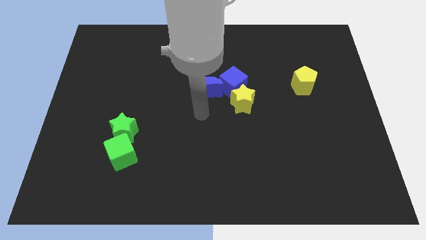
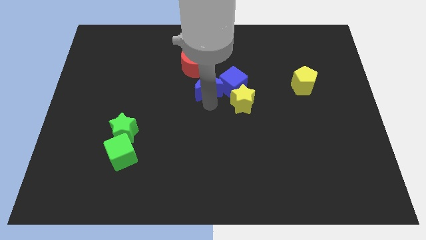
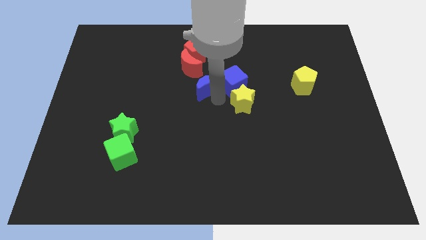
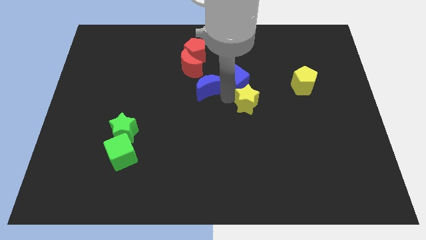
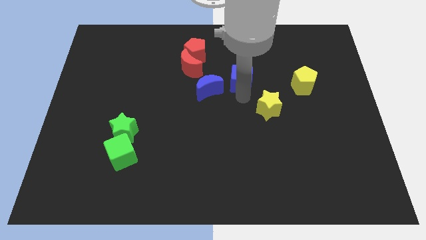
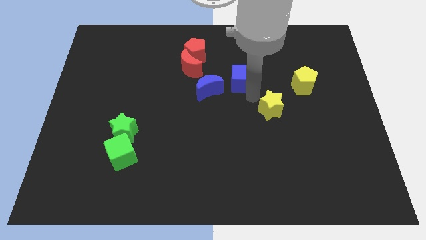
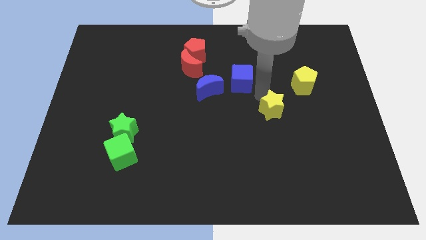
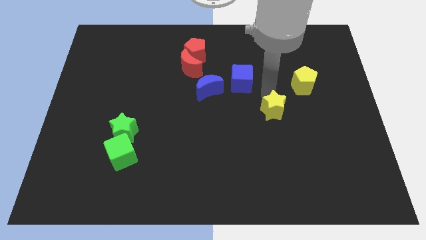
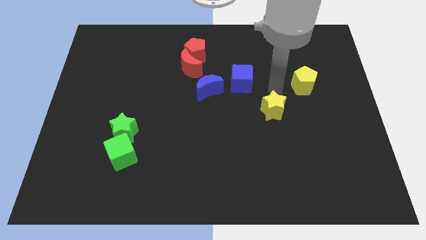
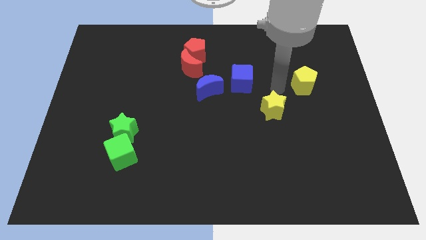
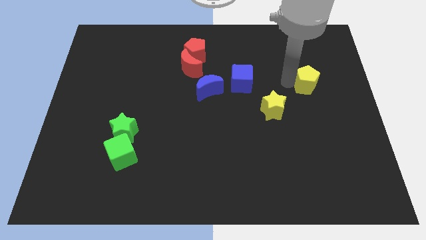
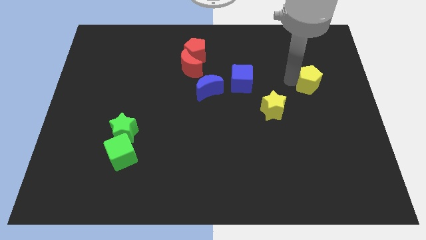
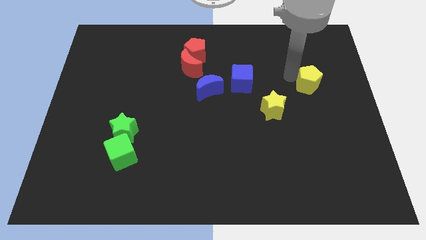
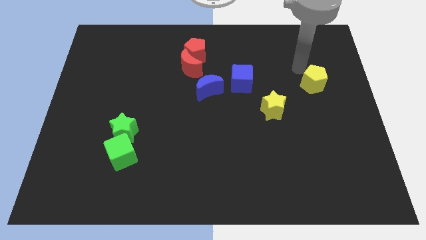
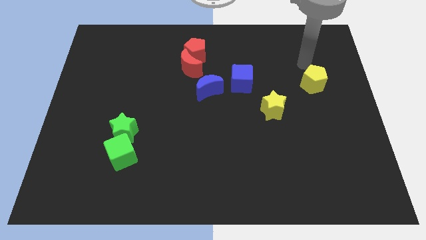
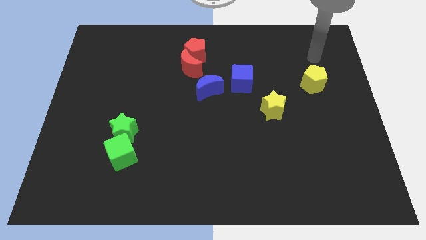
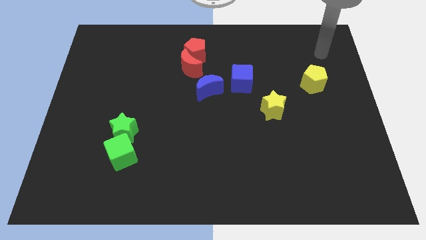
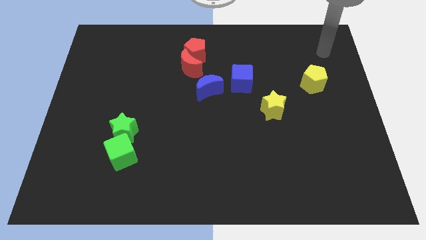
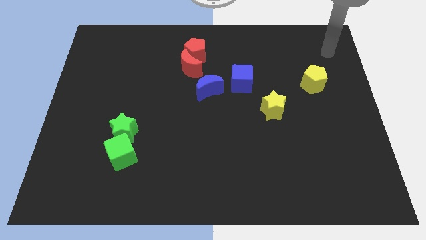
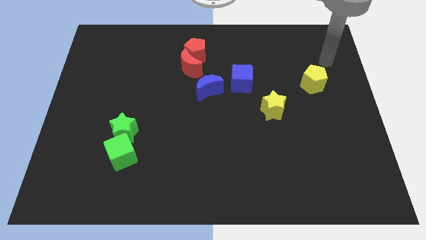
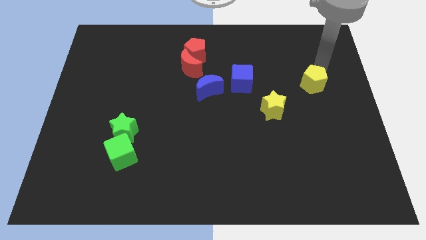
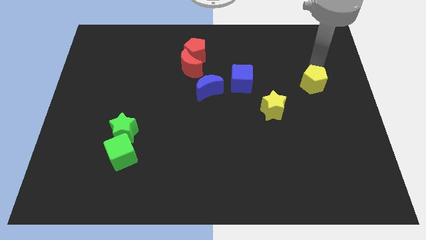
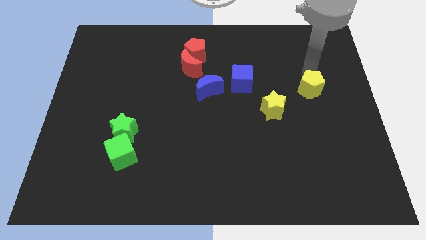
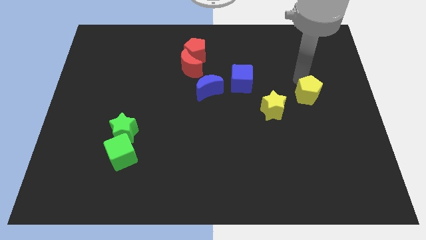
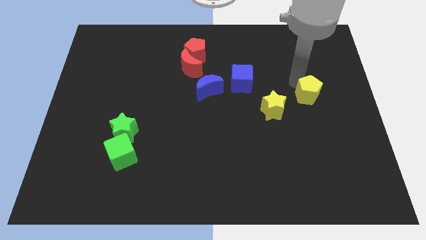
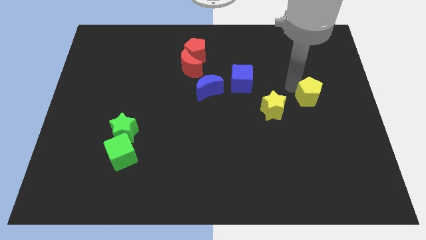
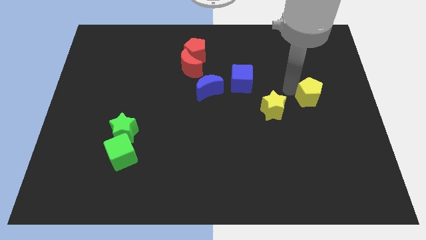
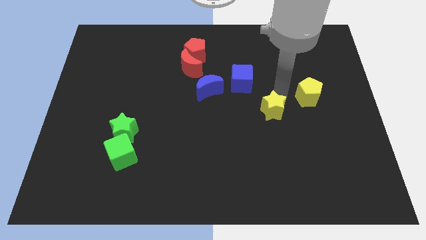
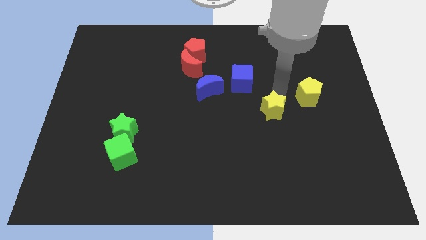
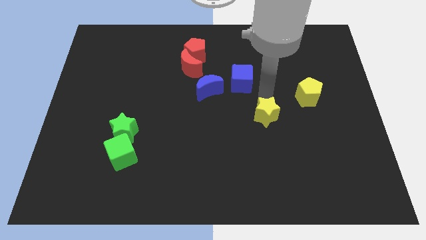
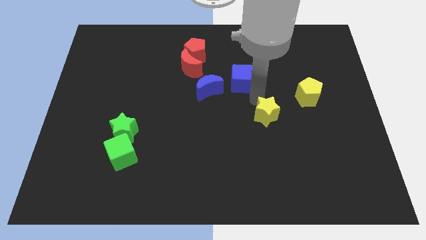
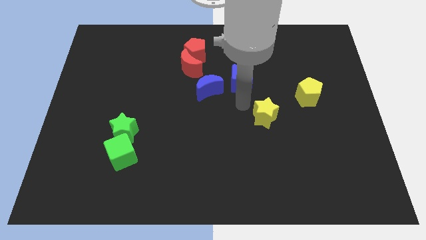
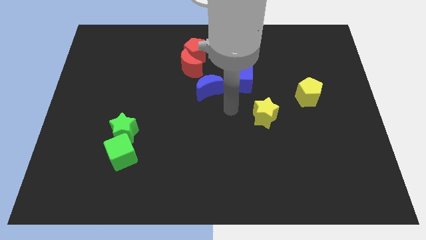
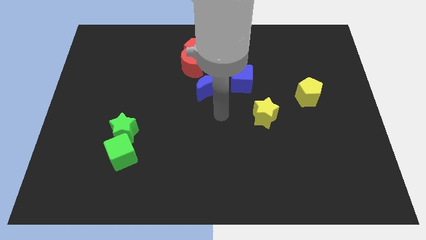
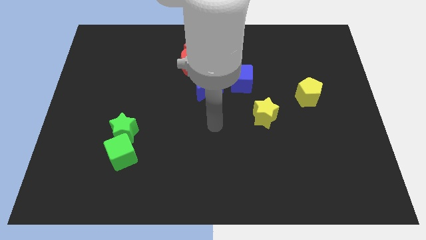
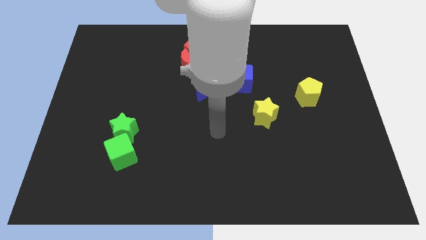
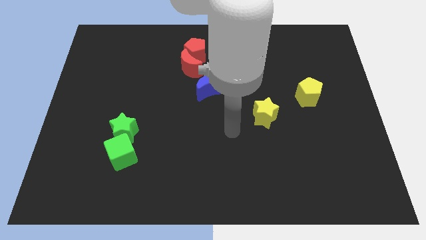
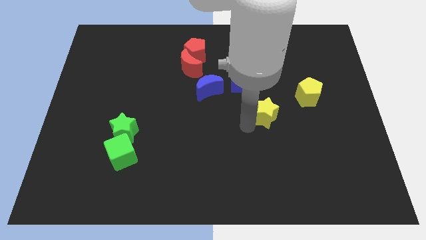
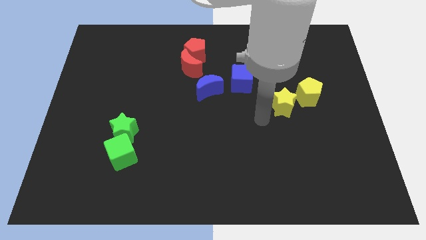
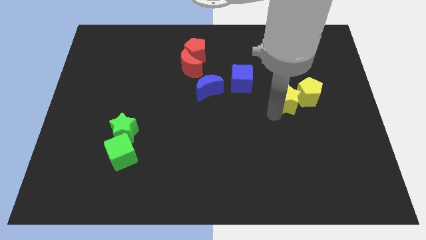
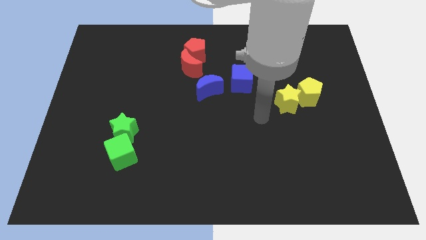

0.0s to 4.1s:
move the yellow star to the left side of the yellow pentagon

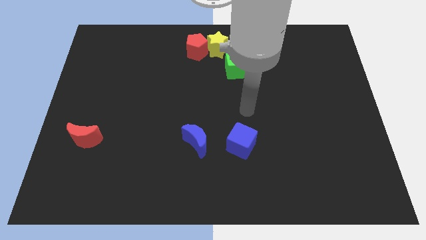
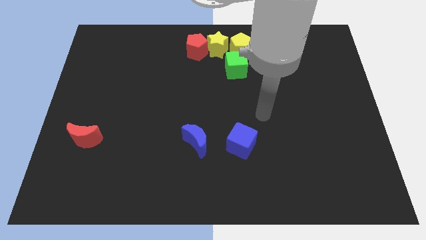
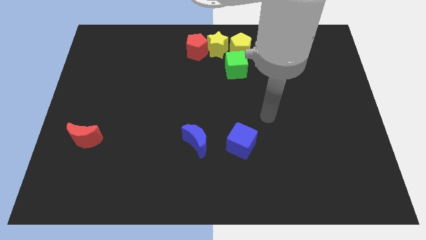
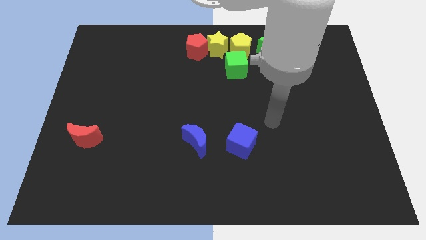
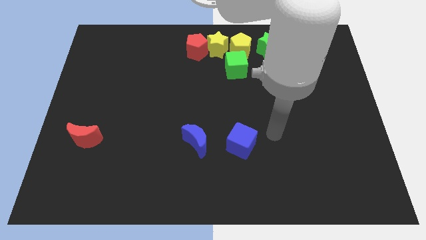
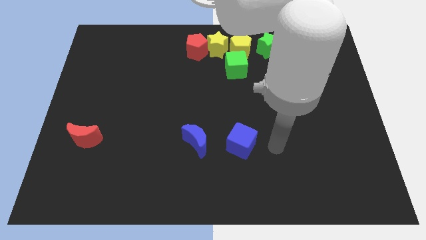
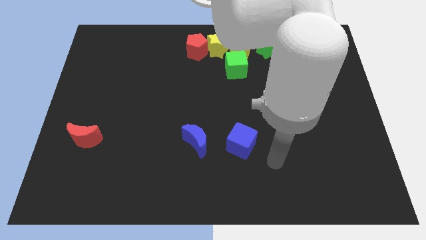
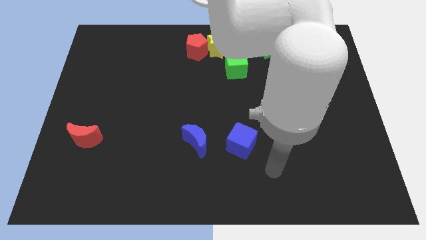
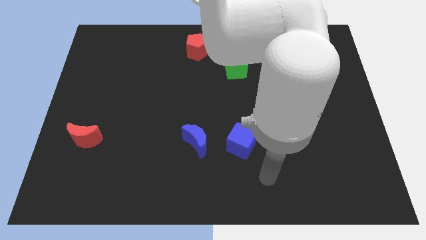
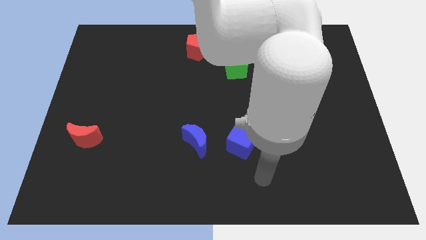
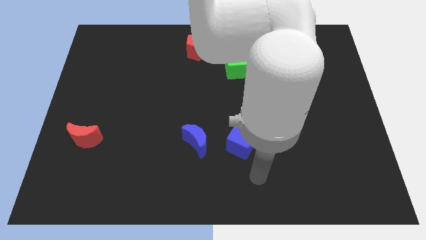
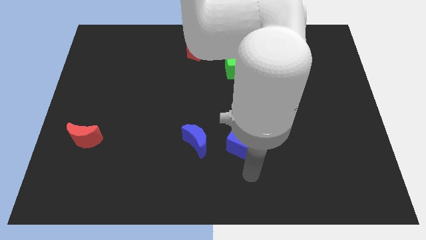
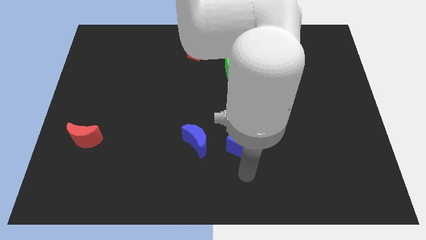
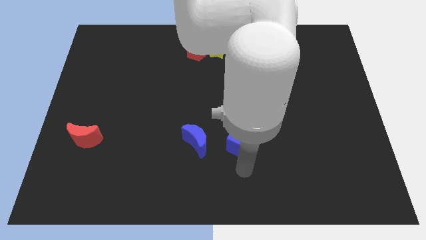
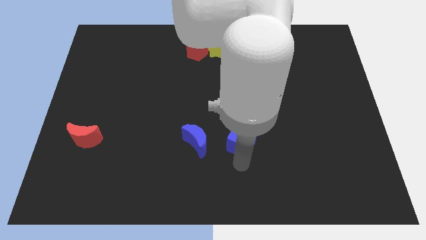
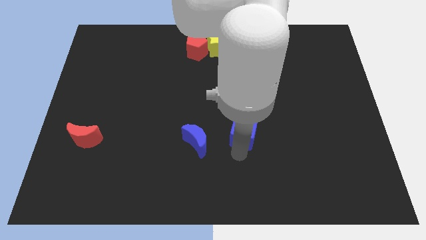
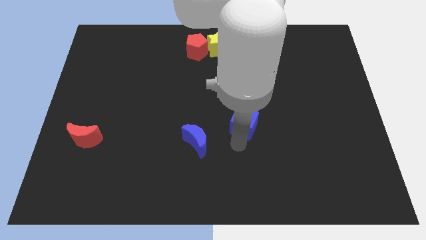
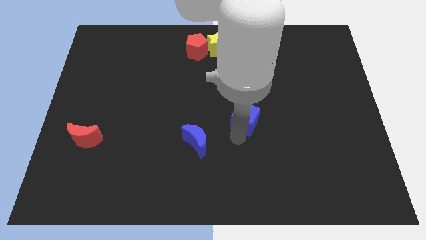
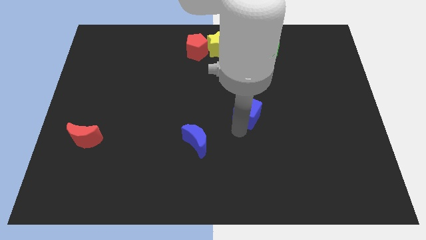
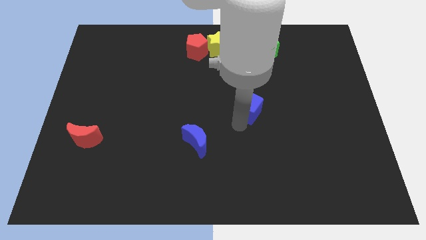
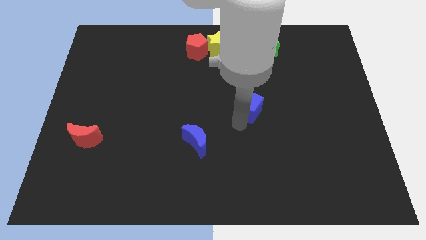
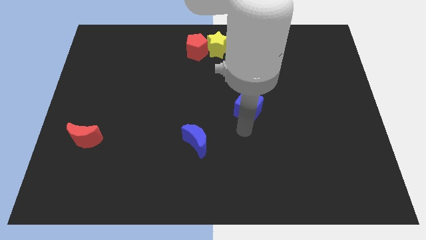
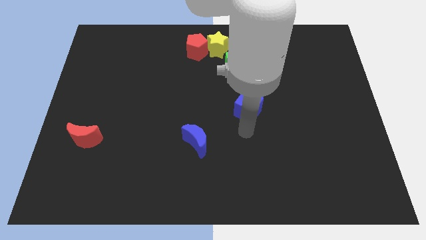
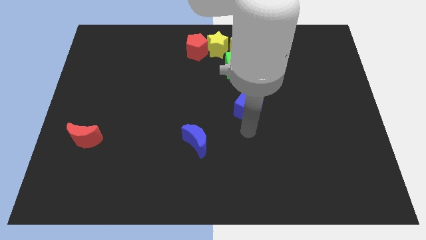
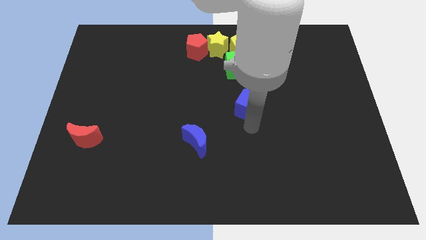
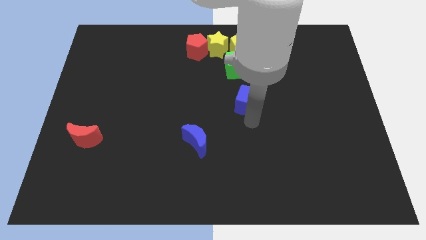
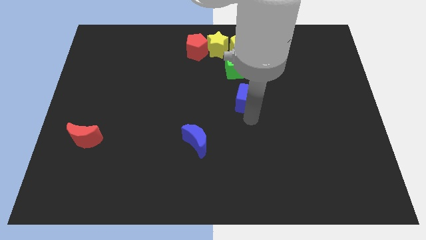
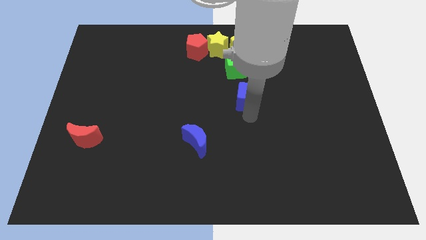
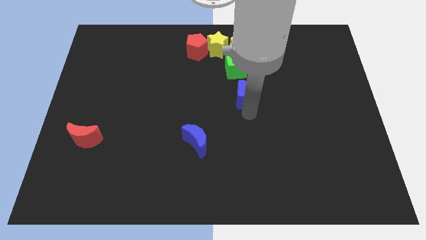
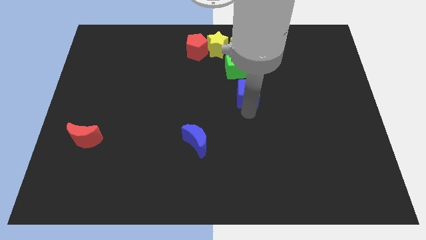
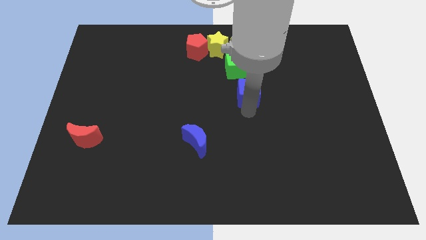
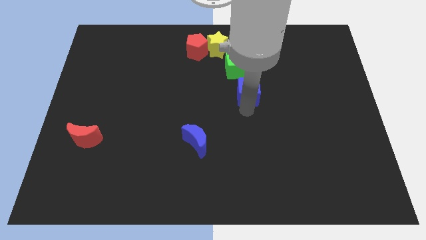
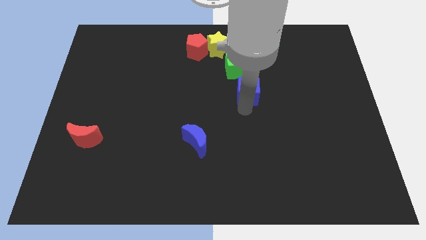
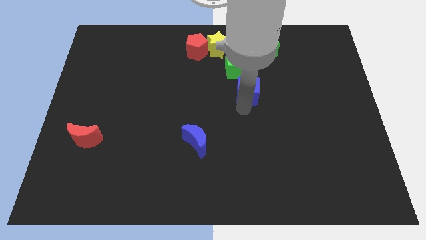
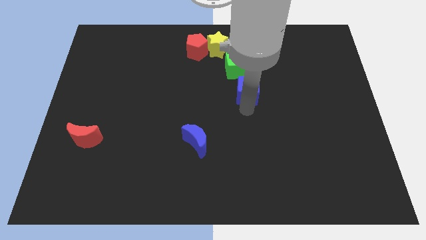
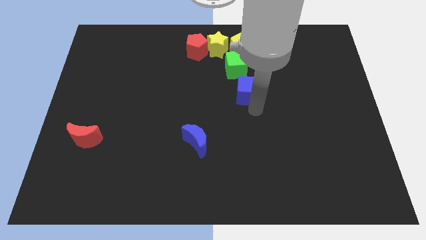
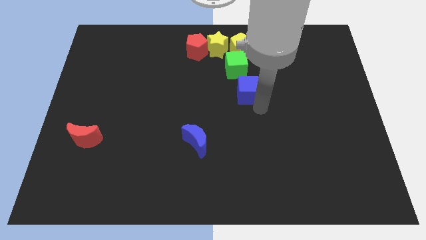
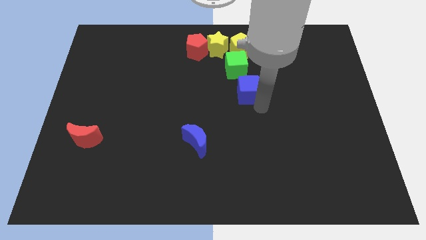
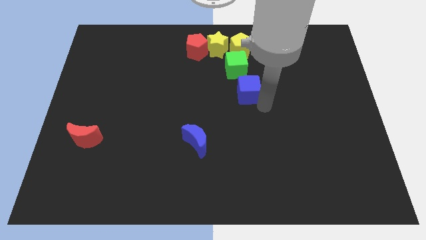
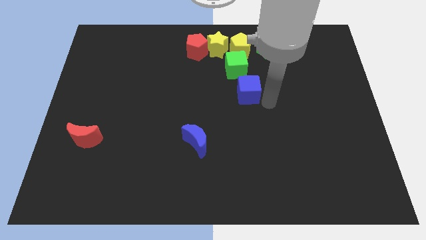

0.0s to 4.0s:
move the blue cube below the green cube

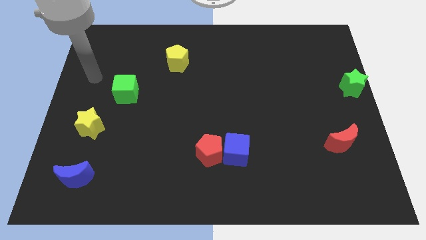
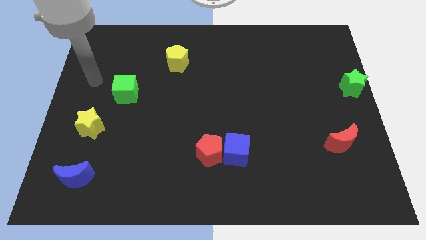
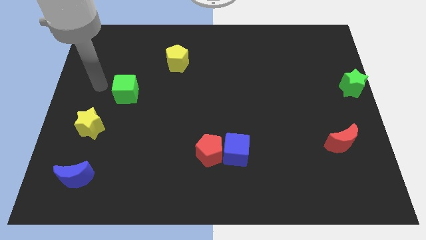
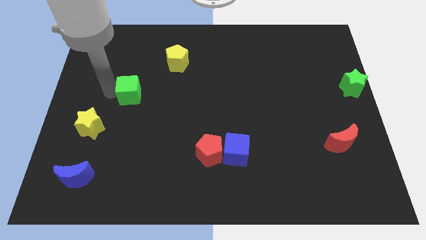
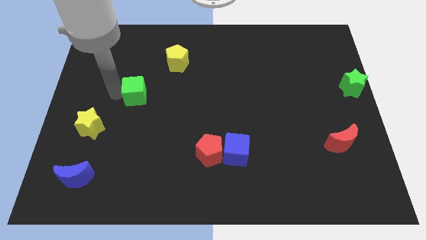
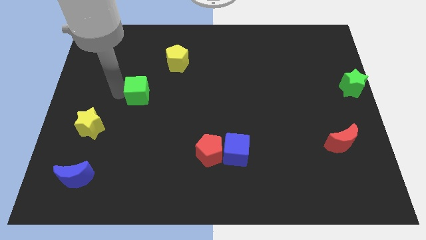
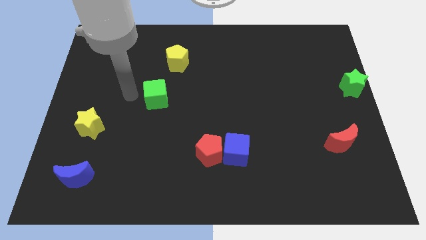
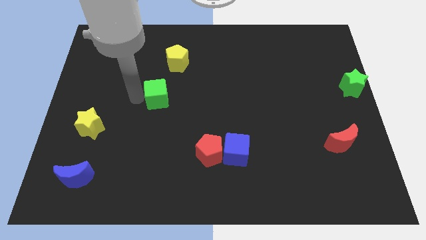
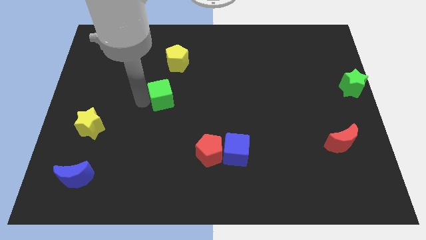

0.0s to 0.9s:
push the green cube to the bottom of the yellow pentagon
